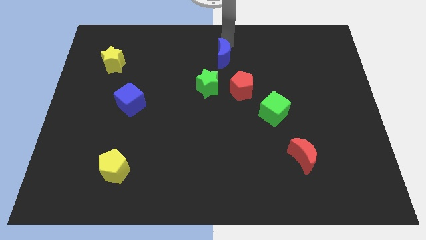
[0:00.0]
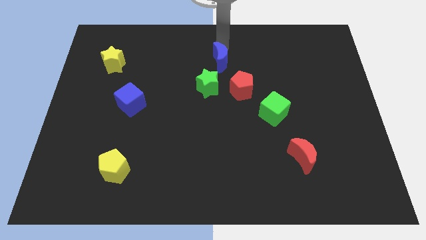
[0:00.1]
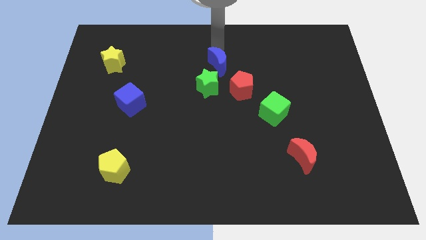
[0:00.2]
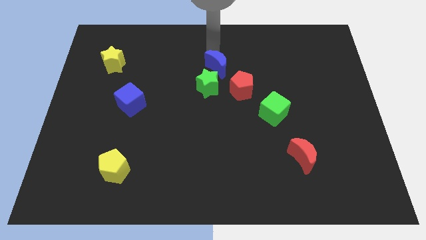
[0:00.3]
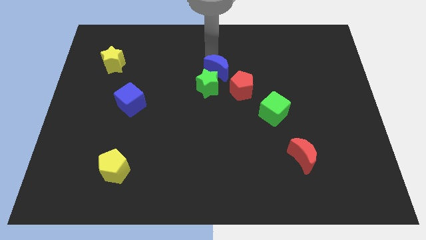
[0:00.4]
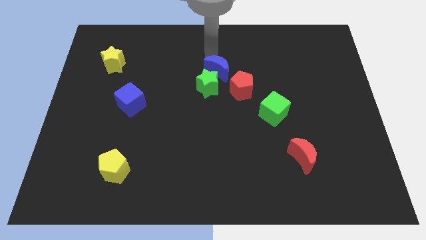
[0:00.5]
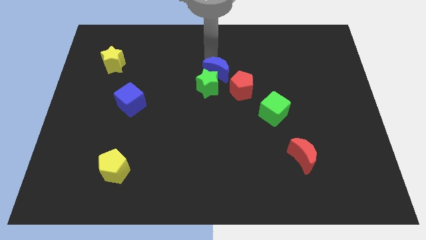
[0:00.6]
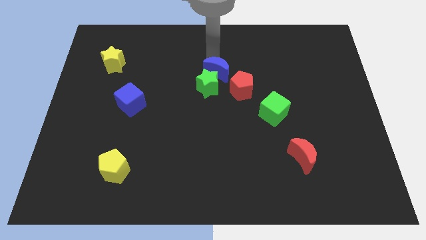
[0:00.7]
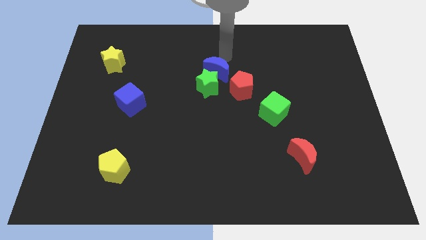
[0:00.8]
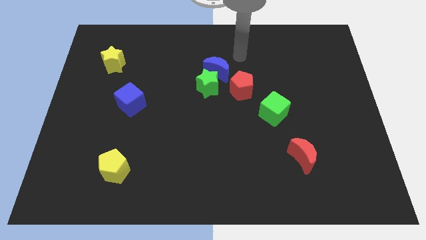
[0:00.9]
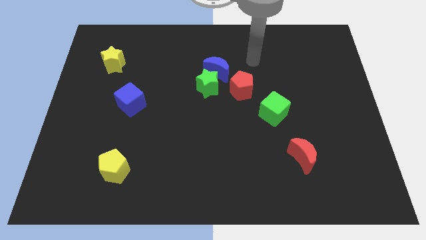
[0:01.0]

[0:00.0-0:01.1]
push the blue cube close to the green star

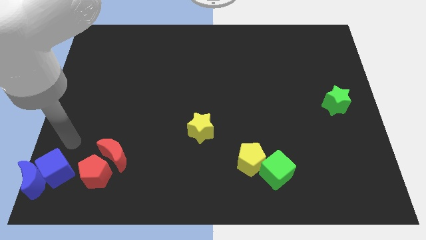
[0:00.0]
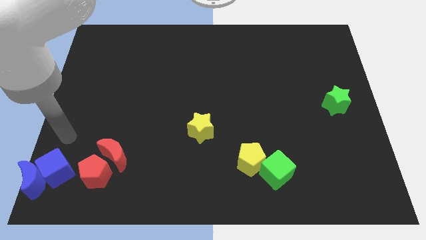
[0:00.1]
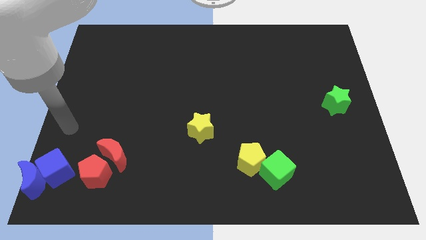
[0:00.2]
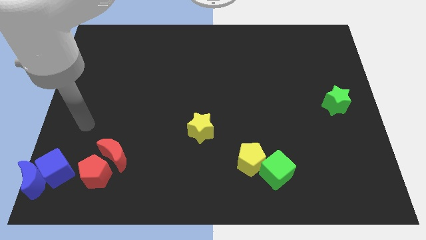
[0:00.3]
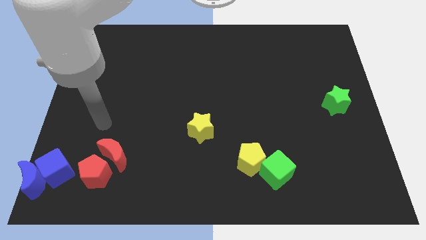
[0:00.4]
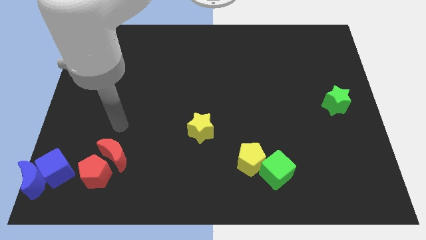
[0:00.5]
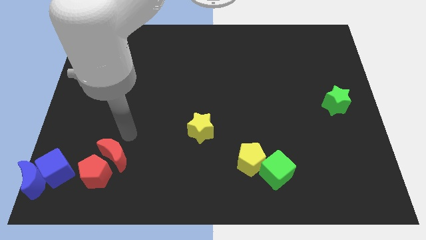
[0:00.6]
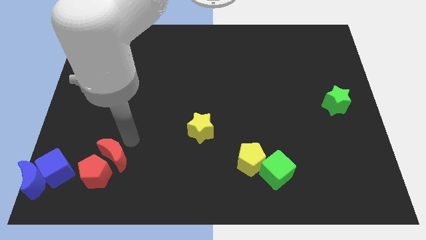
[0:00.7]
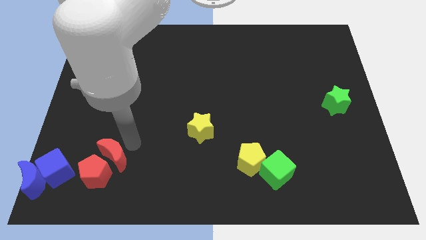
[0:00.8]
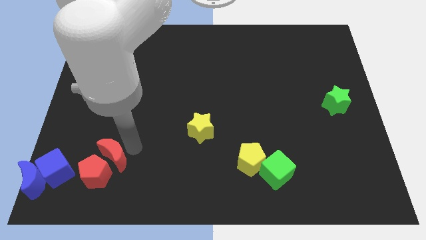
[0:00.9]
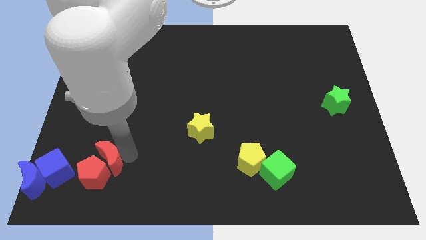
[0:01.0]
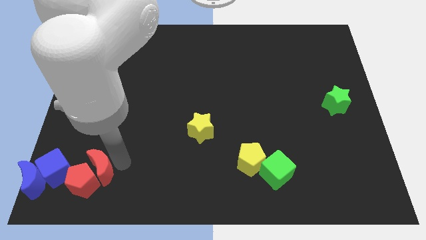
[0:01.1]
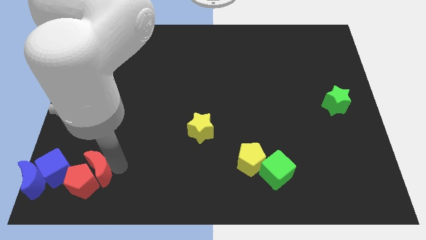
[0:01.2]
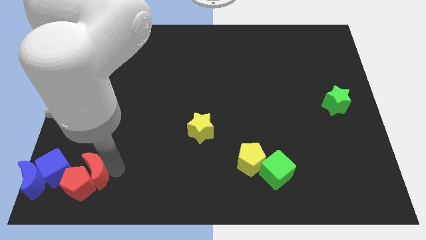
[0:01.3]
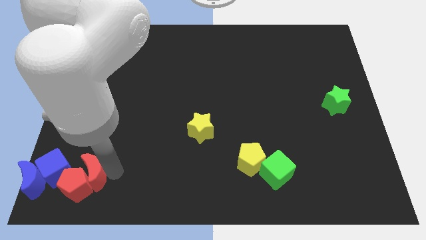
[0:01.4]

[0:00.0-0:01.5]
push the red crescent and red pentagon slightly to the bottom side of the board

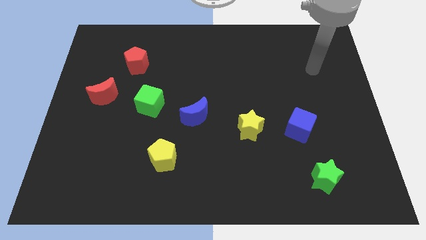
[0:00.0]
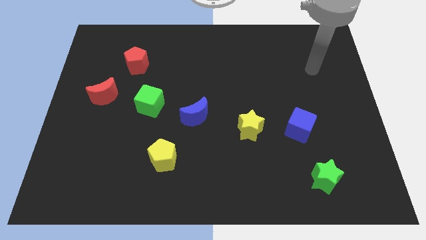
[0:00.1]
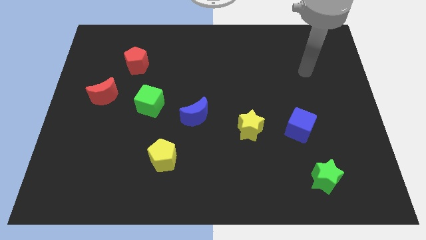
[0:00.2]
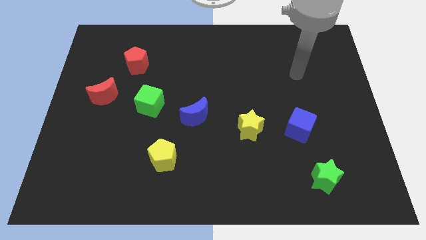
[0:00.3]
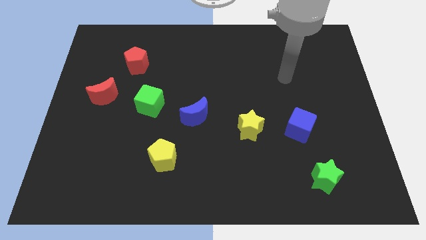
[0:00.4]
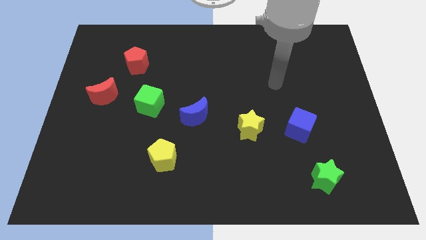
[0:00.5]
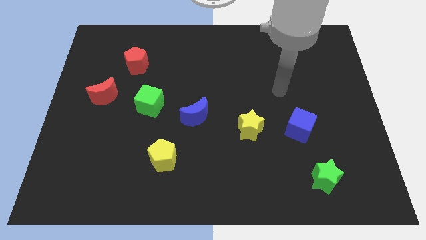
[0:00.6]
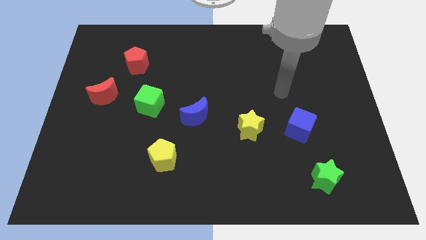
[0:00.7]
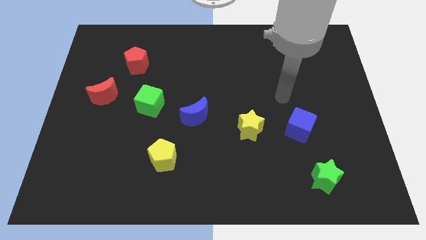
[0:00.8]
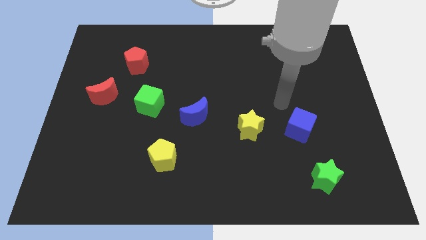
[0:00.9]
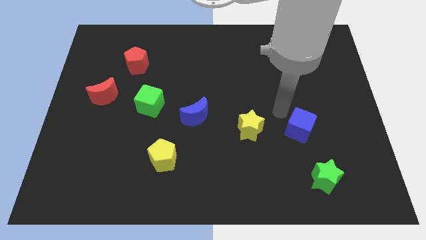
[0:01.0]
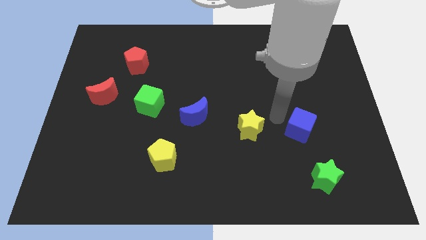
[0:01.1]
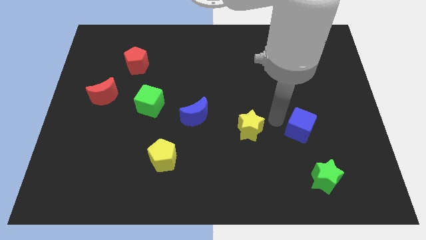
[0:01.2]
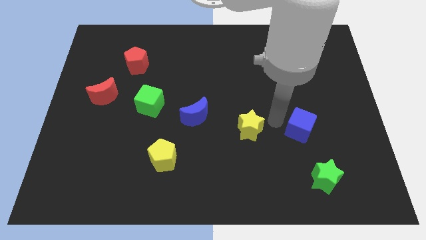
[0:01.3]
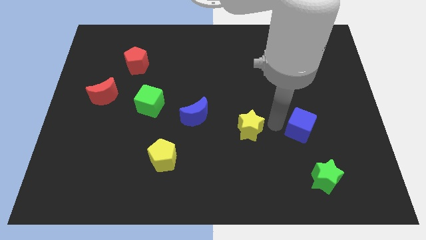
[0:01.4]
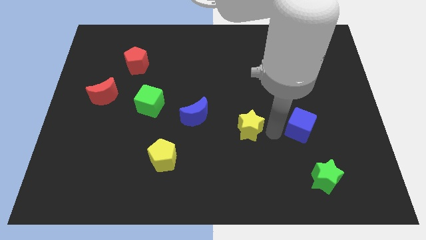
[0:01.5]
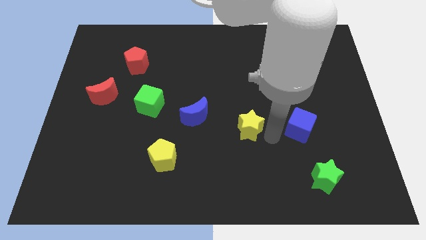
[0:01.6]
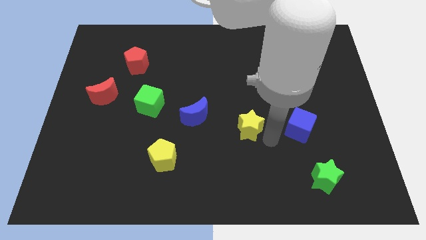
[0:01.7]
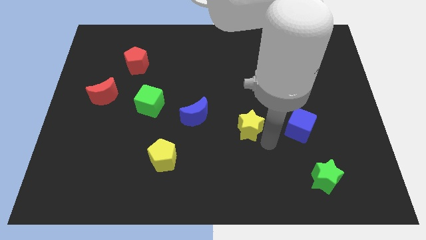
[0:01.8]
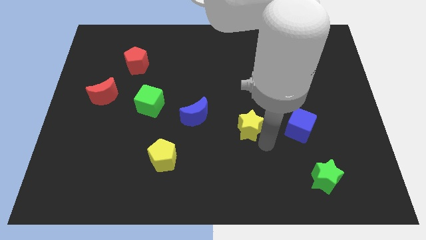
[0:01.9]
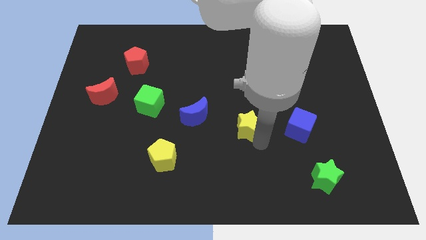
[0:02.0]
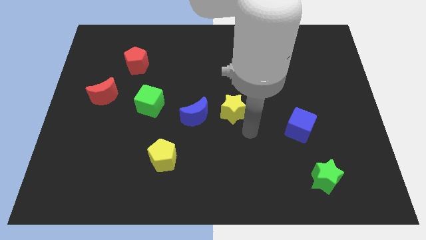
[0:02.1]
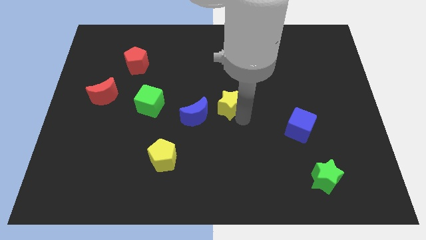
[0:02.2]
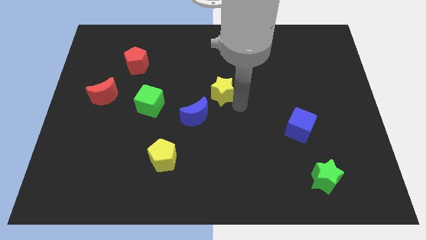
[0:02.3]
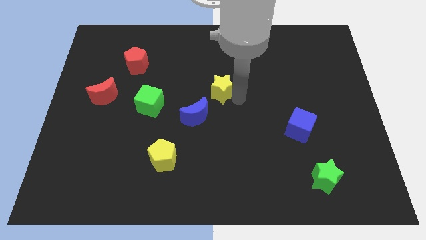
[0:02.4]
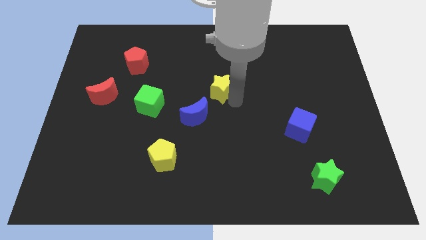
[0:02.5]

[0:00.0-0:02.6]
pull the green up diagonal to the yellow star

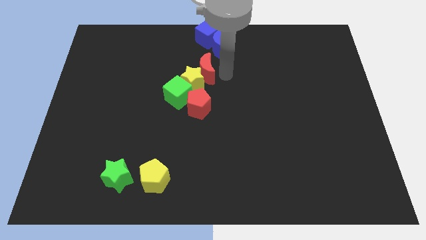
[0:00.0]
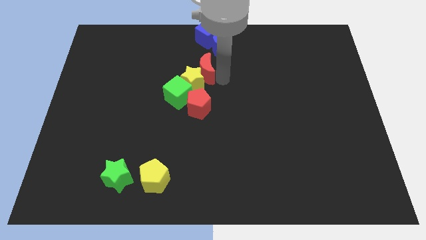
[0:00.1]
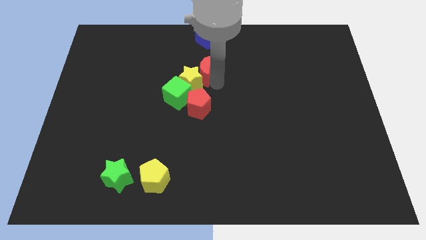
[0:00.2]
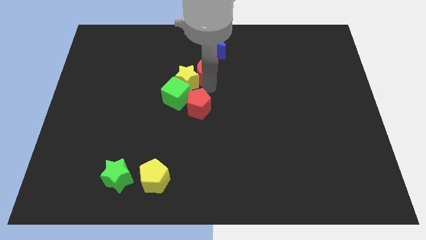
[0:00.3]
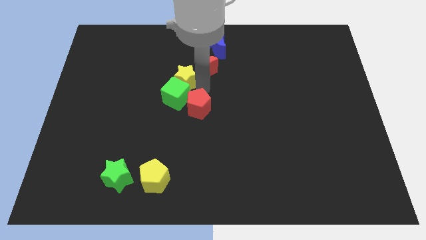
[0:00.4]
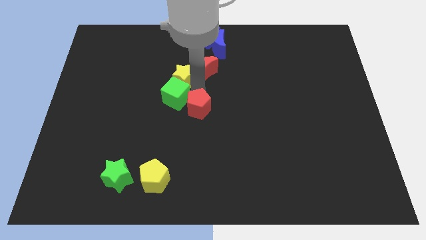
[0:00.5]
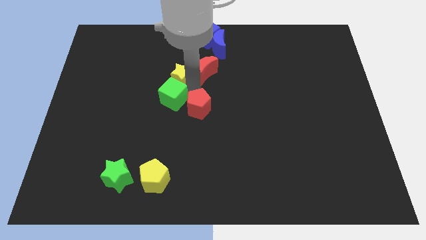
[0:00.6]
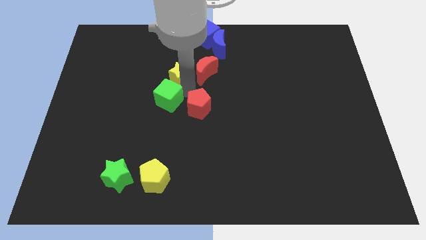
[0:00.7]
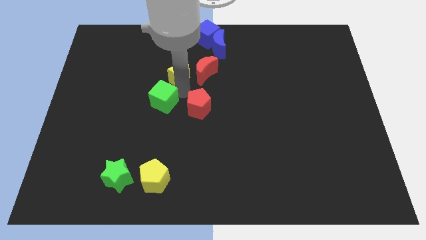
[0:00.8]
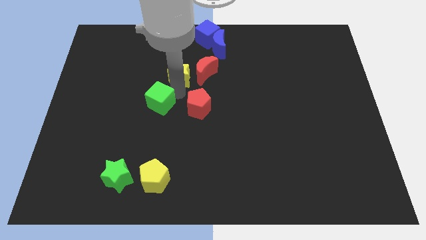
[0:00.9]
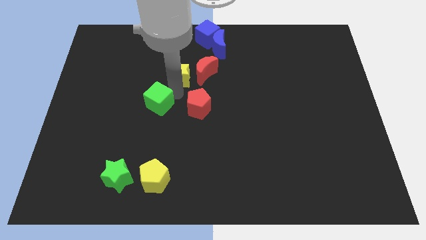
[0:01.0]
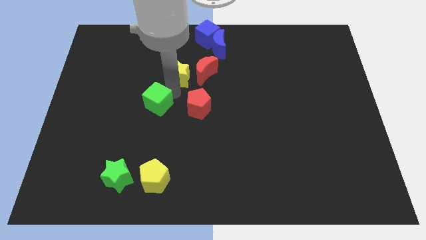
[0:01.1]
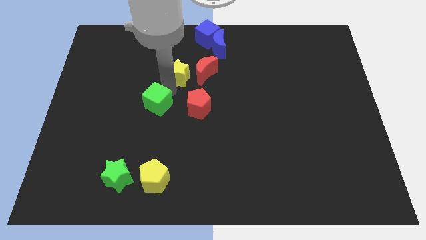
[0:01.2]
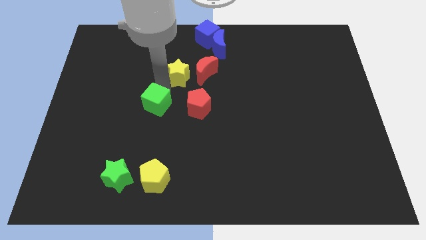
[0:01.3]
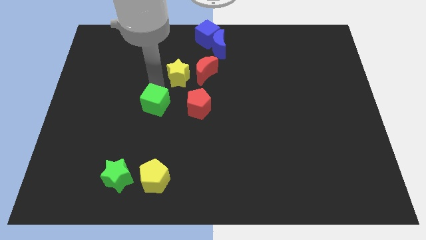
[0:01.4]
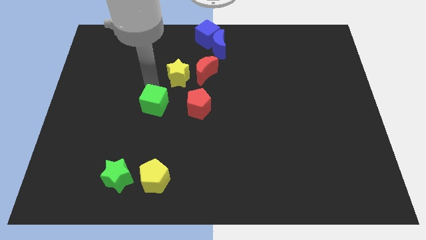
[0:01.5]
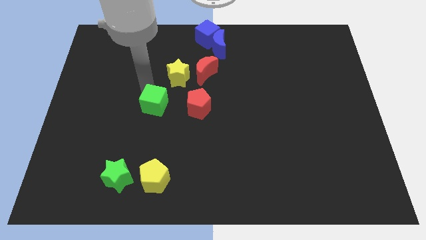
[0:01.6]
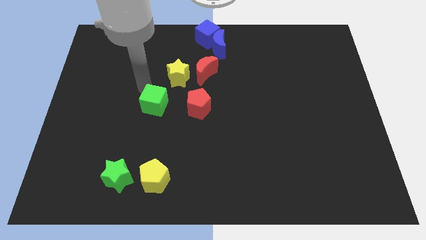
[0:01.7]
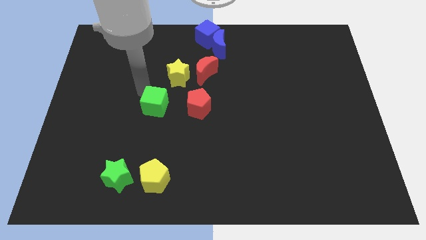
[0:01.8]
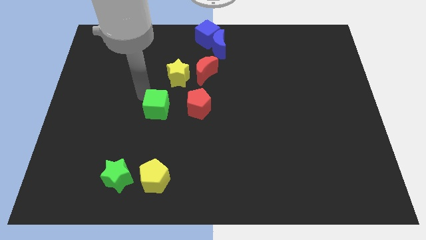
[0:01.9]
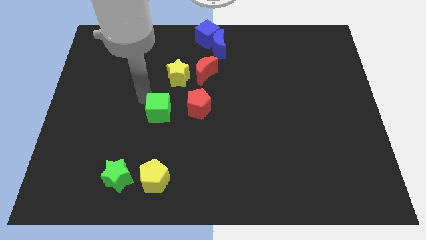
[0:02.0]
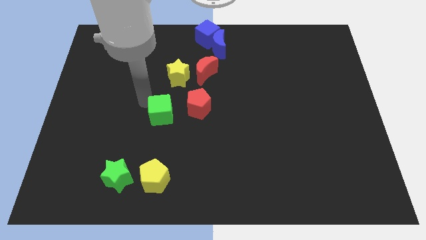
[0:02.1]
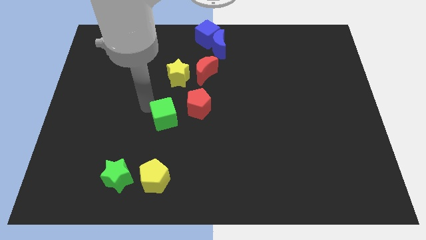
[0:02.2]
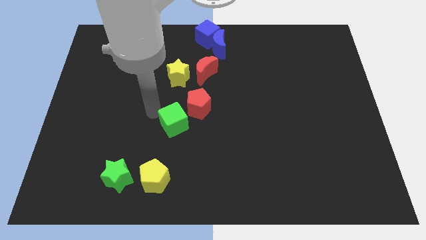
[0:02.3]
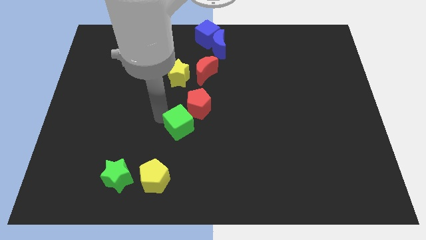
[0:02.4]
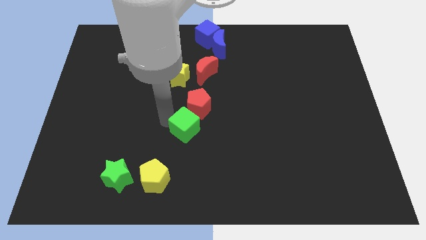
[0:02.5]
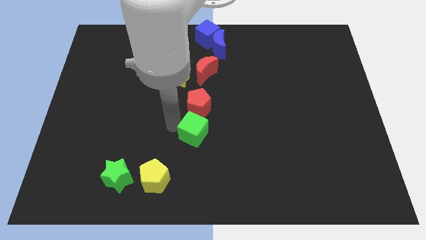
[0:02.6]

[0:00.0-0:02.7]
move the green cube to the bottom of red pentagon

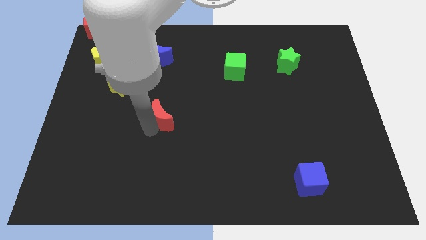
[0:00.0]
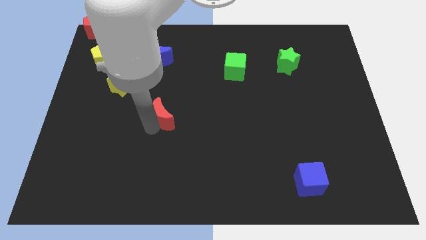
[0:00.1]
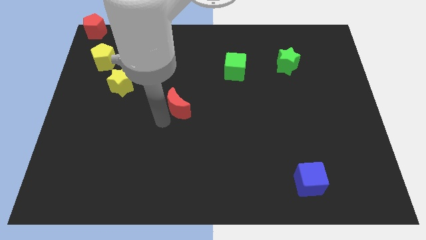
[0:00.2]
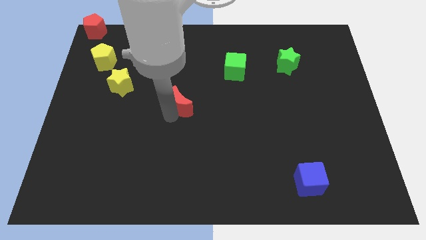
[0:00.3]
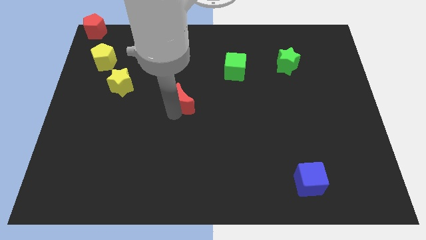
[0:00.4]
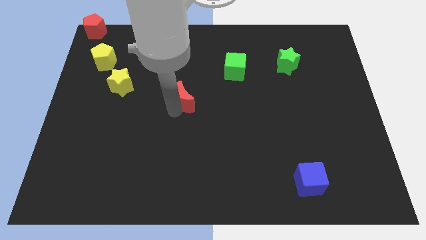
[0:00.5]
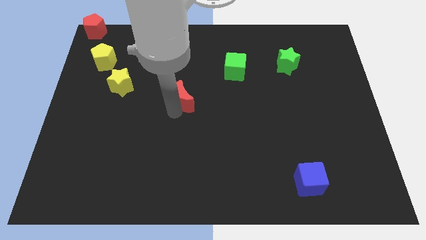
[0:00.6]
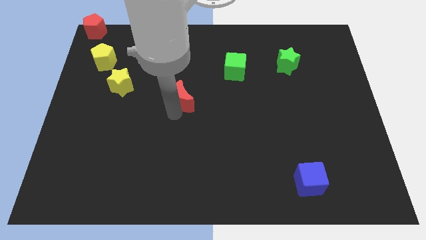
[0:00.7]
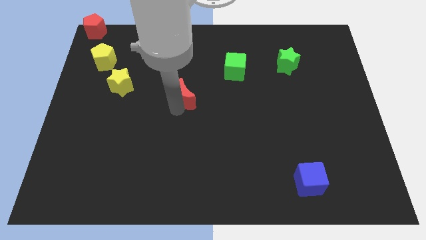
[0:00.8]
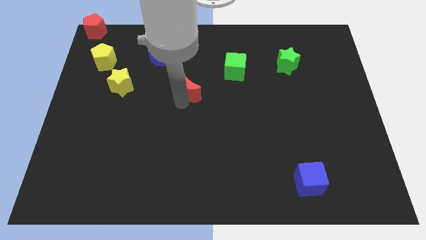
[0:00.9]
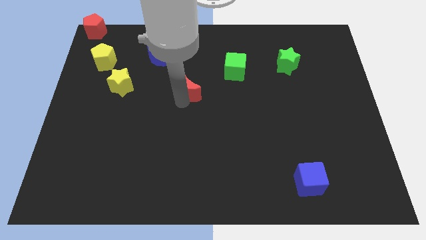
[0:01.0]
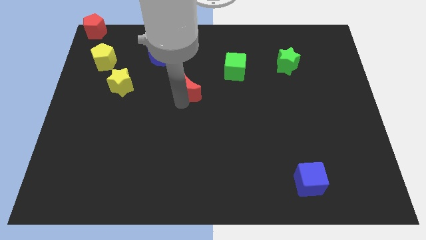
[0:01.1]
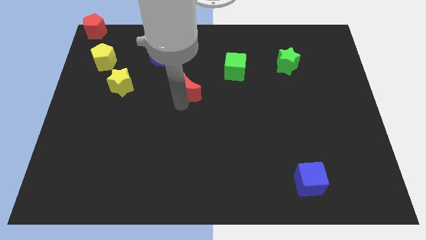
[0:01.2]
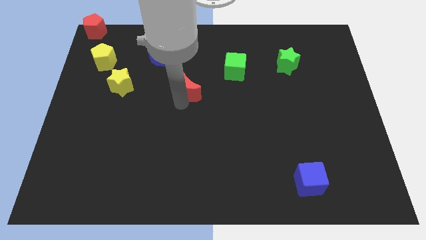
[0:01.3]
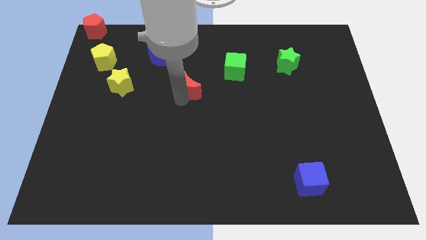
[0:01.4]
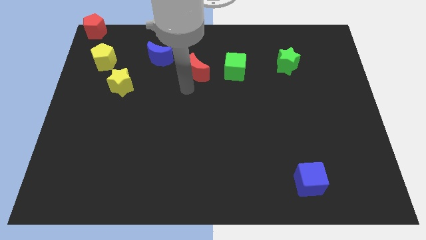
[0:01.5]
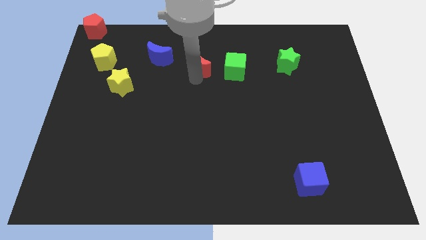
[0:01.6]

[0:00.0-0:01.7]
push the red crescent to the left of the green cube
